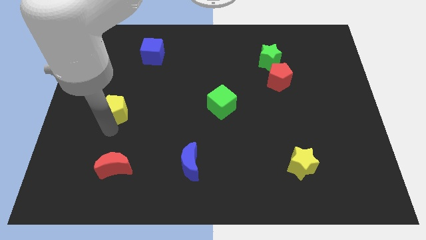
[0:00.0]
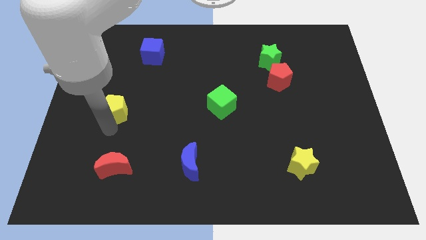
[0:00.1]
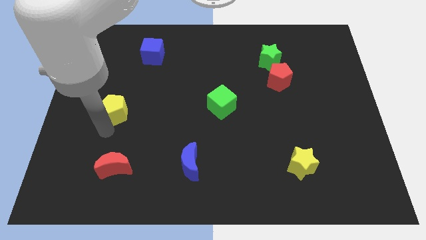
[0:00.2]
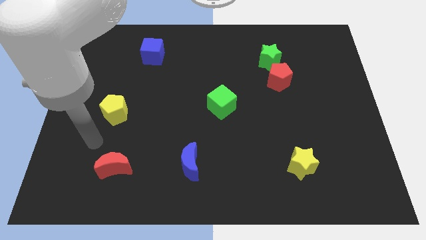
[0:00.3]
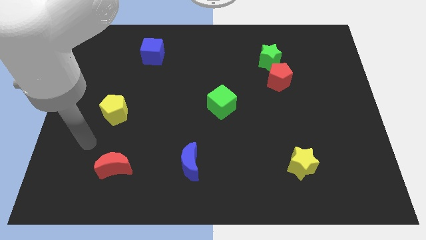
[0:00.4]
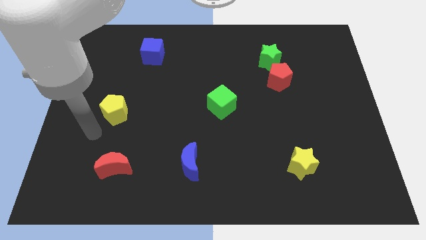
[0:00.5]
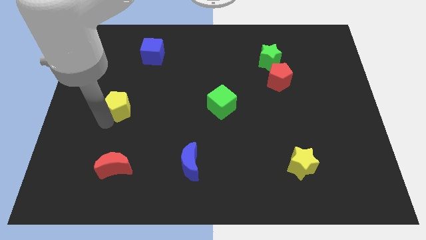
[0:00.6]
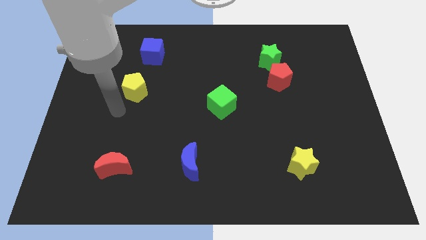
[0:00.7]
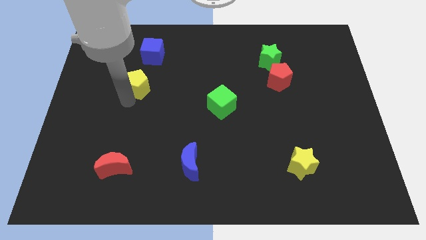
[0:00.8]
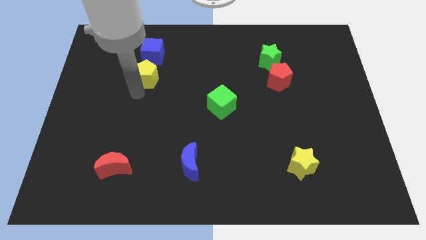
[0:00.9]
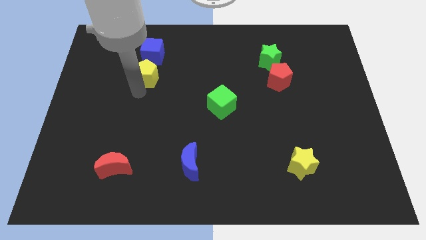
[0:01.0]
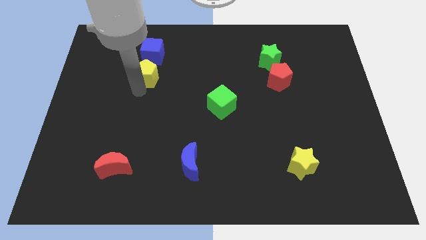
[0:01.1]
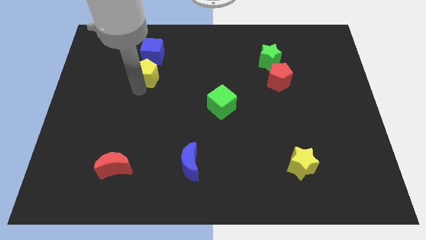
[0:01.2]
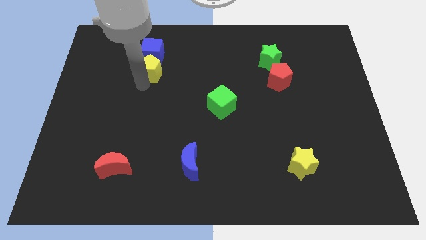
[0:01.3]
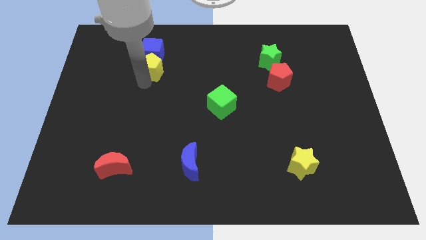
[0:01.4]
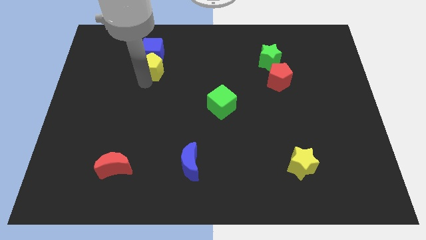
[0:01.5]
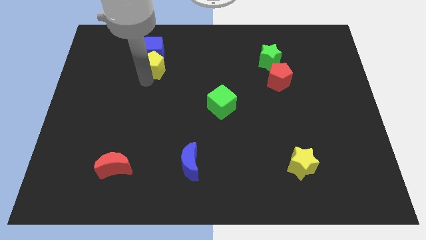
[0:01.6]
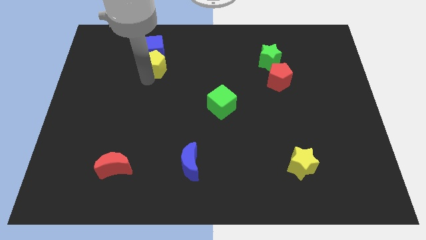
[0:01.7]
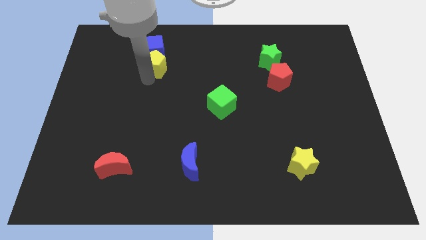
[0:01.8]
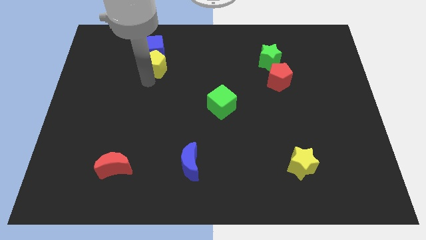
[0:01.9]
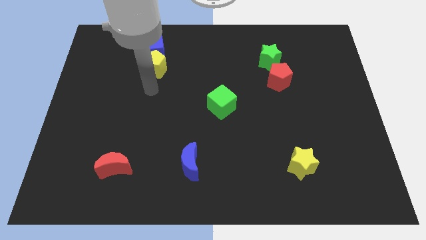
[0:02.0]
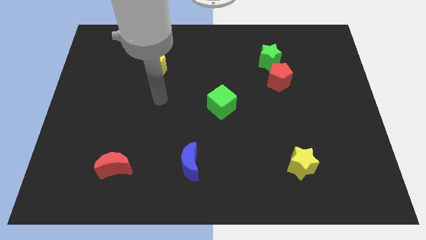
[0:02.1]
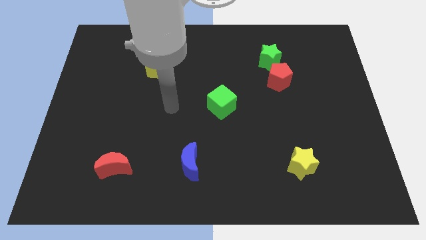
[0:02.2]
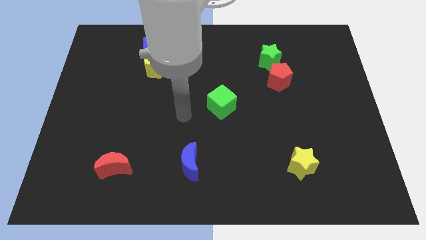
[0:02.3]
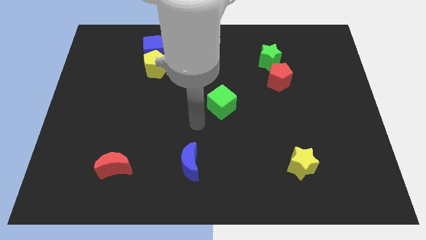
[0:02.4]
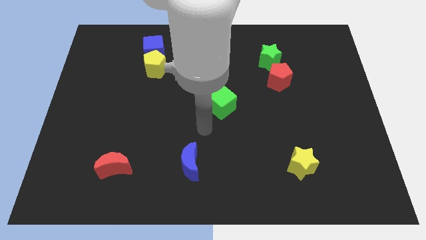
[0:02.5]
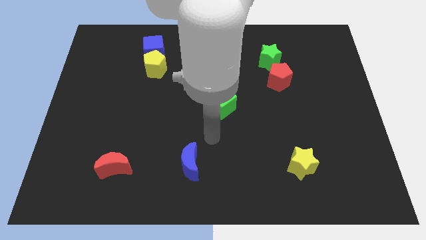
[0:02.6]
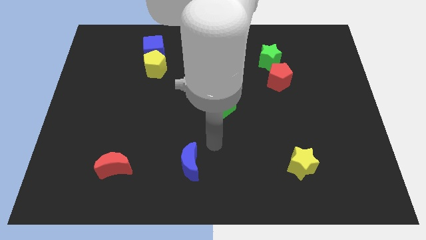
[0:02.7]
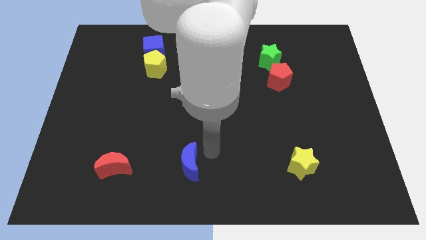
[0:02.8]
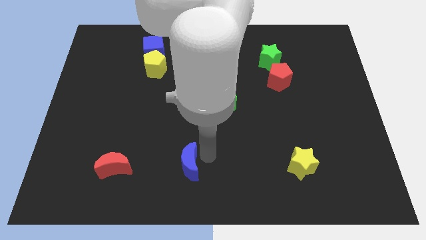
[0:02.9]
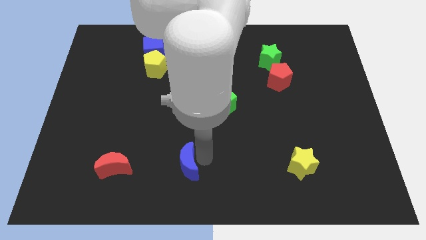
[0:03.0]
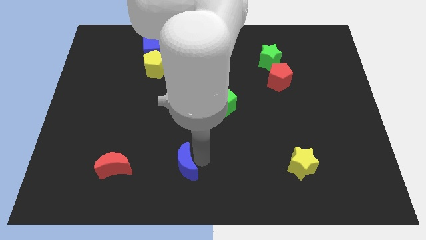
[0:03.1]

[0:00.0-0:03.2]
make the yellow pentagon to touch the bottom side of the blue cube

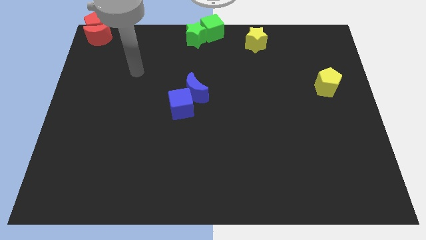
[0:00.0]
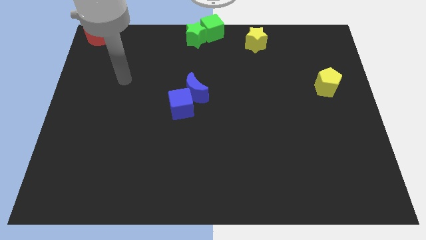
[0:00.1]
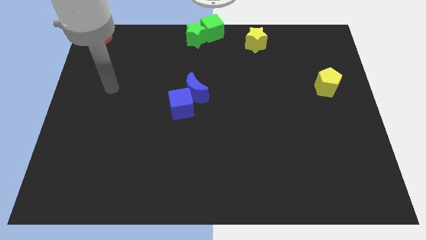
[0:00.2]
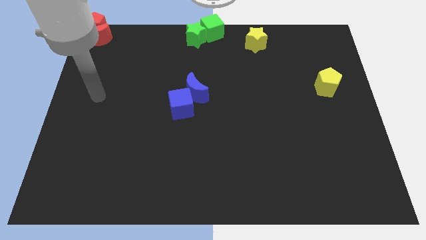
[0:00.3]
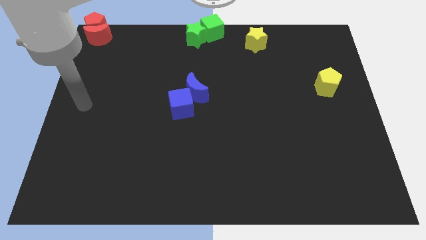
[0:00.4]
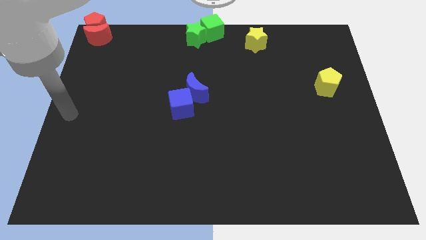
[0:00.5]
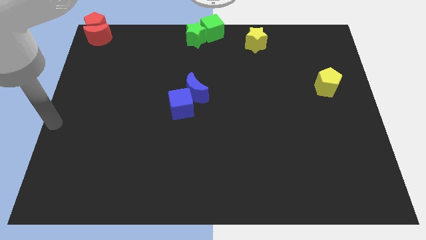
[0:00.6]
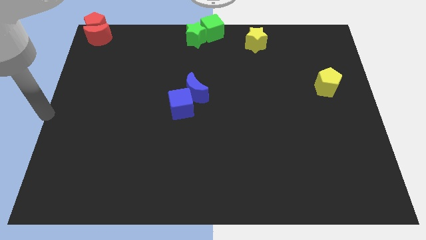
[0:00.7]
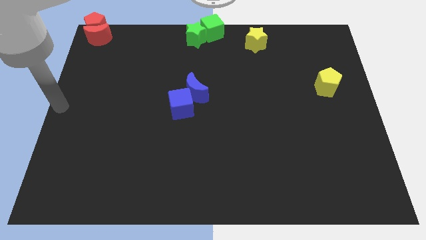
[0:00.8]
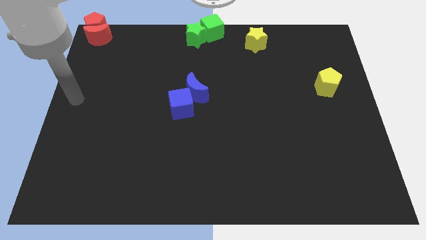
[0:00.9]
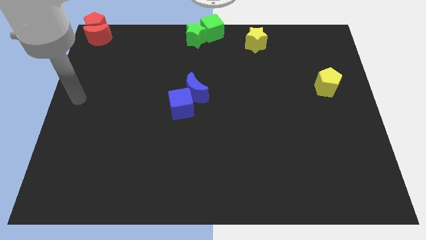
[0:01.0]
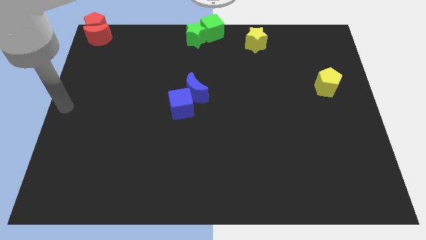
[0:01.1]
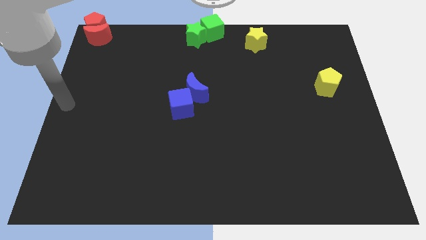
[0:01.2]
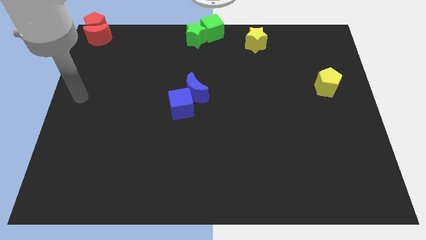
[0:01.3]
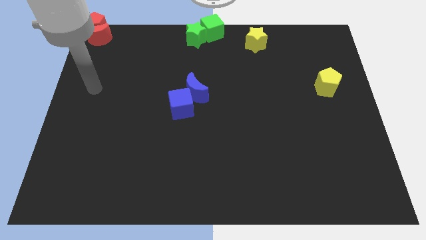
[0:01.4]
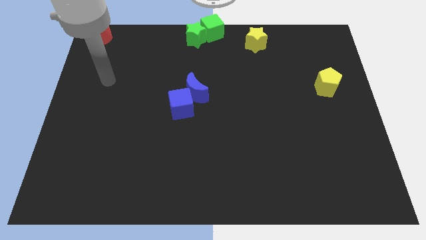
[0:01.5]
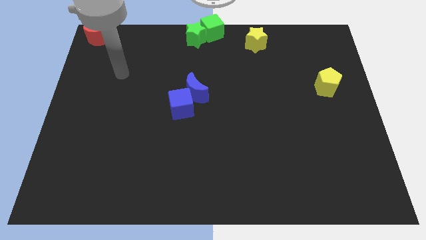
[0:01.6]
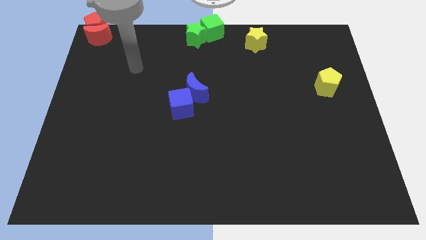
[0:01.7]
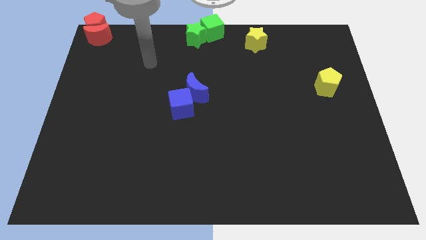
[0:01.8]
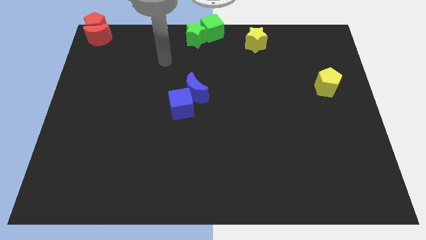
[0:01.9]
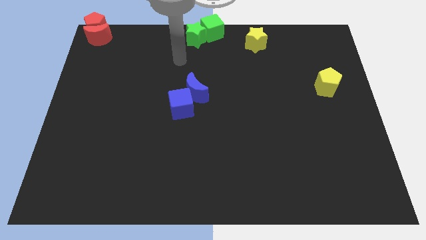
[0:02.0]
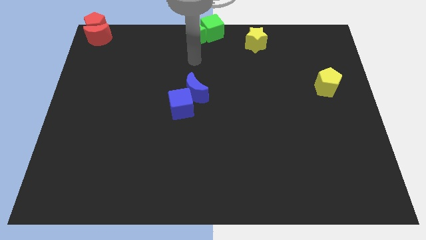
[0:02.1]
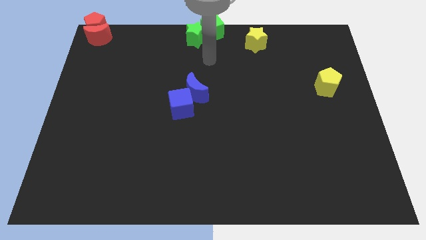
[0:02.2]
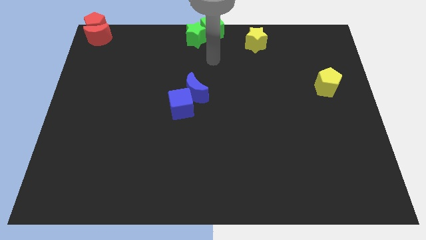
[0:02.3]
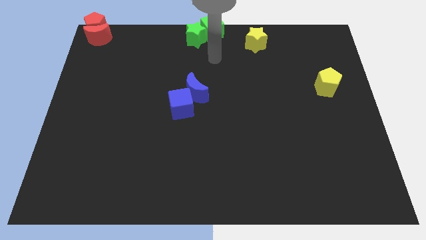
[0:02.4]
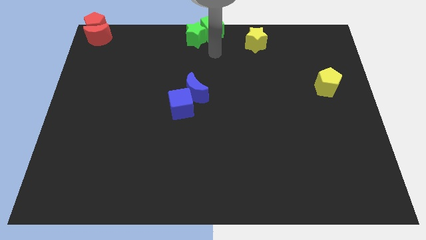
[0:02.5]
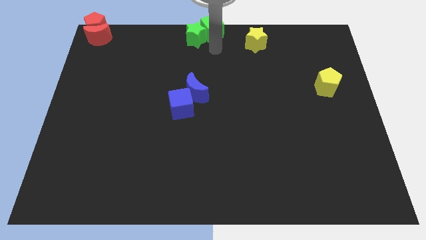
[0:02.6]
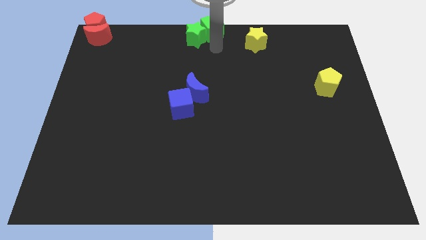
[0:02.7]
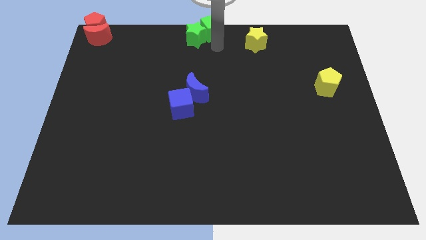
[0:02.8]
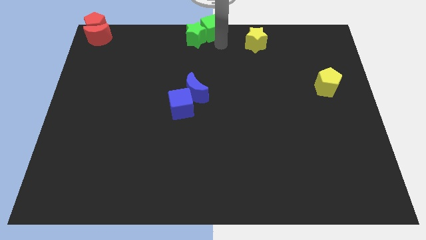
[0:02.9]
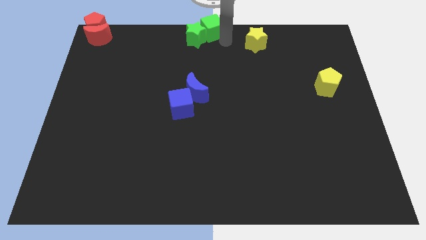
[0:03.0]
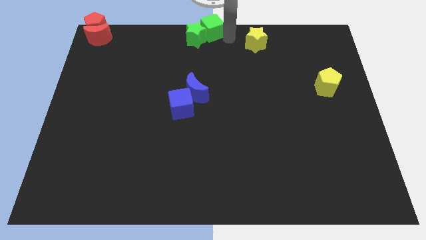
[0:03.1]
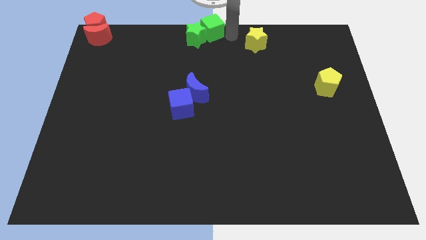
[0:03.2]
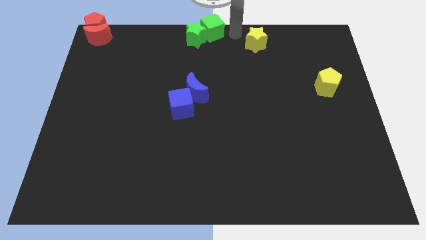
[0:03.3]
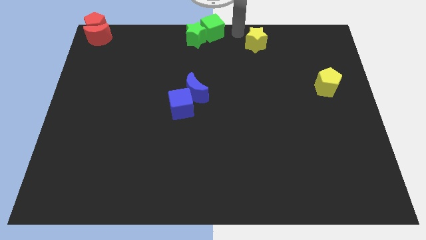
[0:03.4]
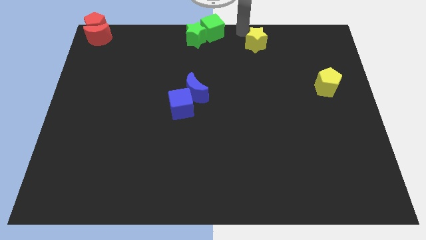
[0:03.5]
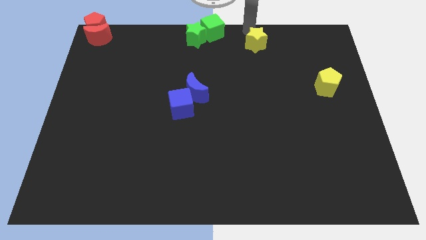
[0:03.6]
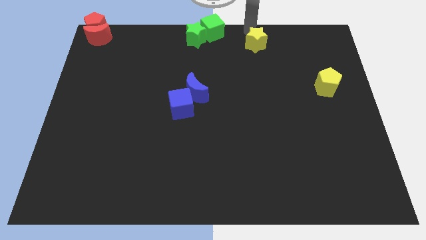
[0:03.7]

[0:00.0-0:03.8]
move your arm towards the yellow star

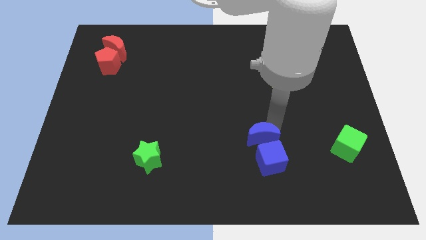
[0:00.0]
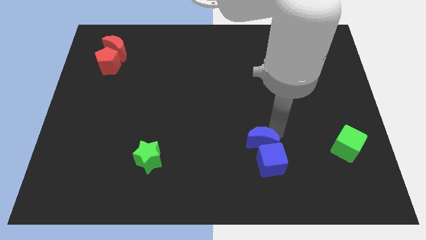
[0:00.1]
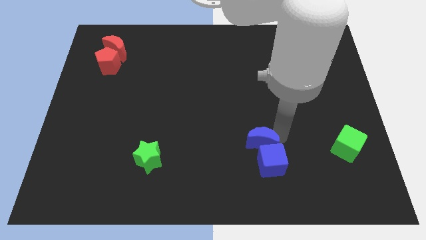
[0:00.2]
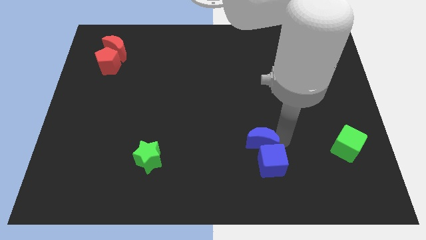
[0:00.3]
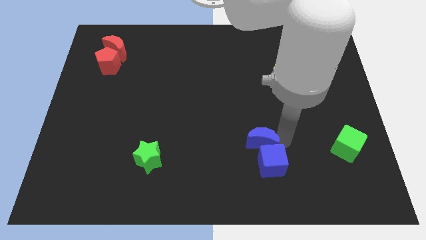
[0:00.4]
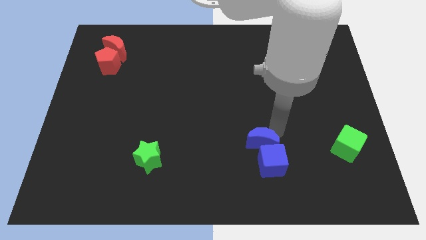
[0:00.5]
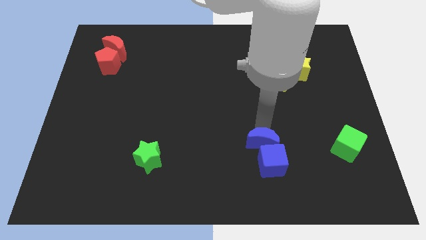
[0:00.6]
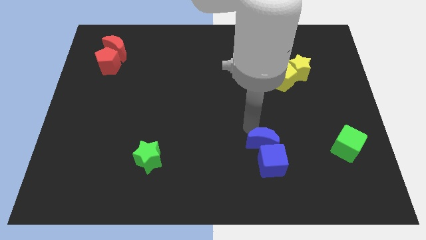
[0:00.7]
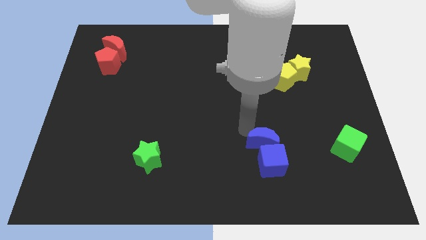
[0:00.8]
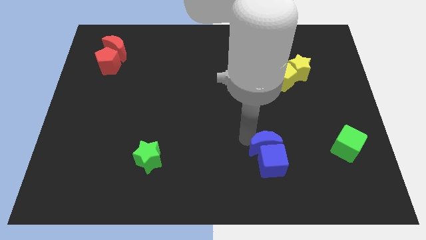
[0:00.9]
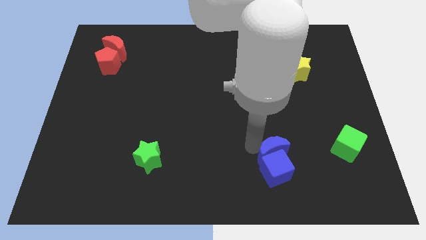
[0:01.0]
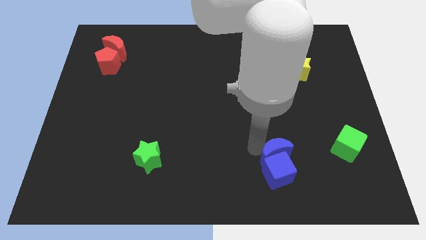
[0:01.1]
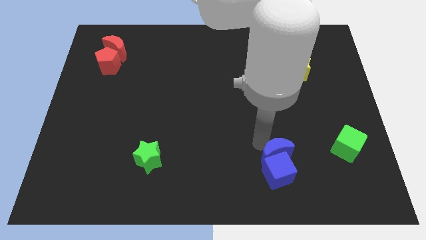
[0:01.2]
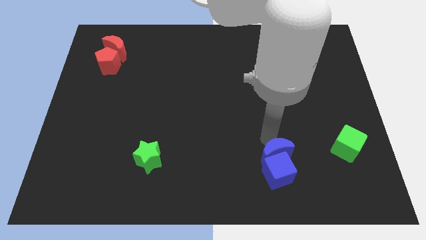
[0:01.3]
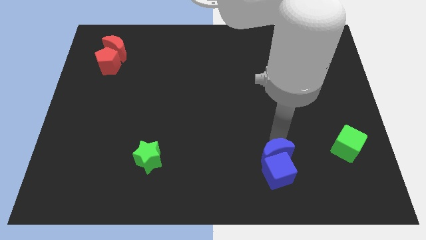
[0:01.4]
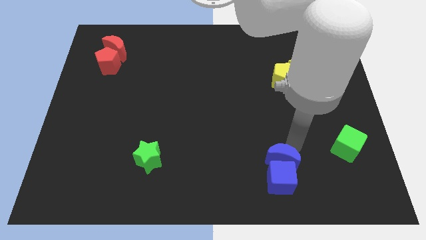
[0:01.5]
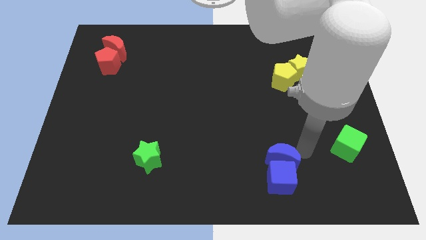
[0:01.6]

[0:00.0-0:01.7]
push the blue cube with the help of the blue crescent towards the bottom center of the board

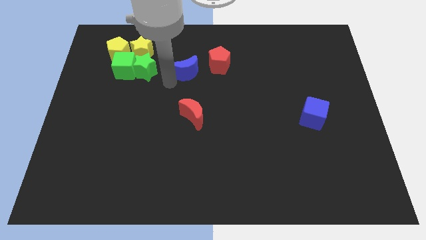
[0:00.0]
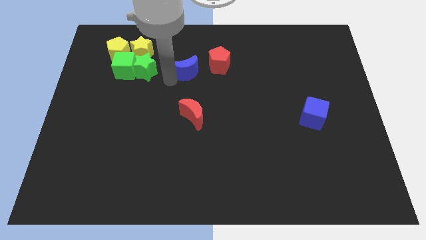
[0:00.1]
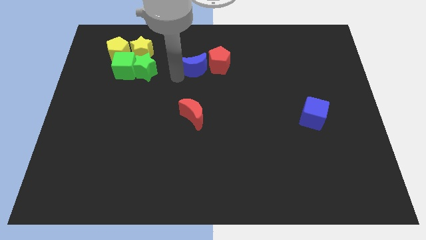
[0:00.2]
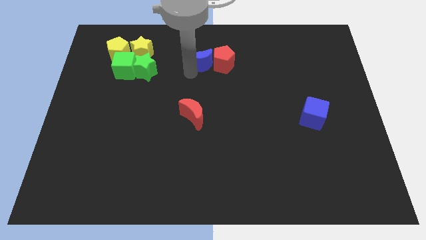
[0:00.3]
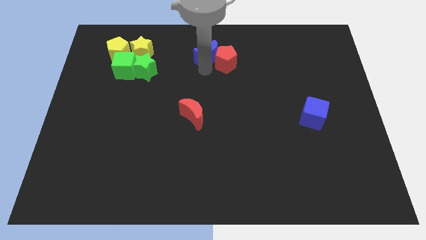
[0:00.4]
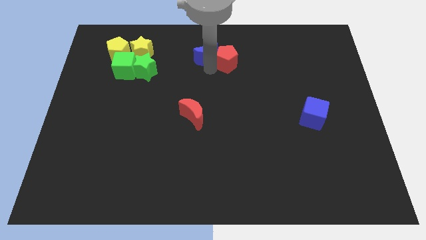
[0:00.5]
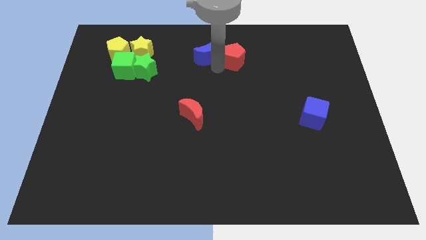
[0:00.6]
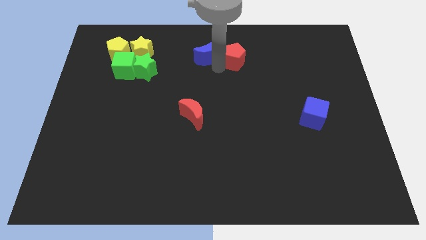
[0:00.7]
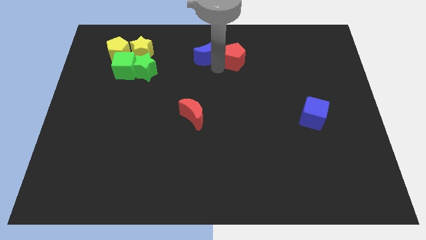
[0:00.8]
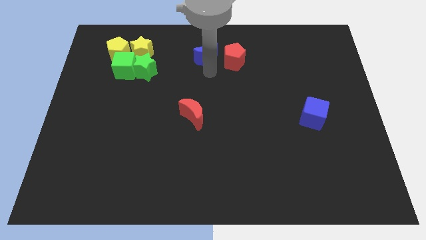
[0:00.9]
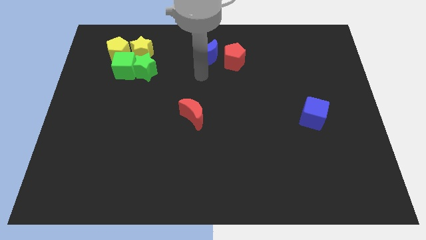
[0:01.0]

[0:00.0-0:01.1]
push the blue moon to the right
